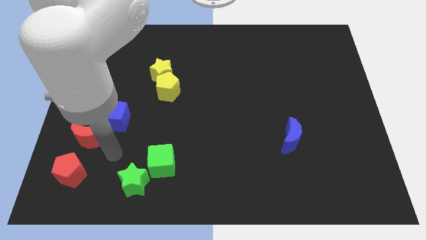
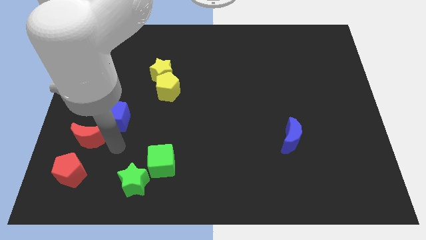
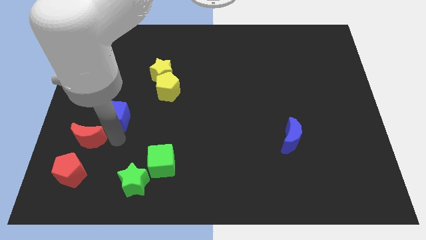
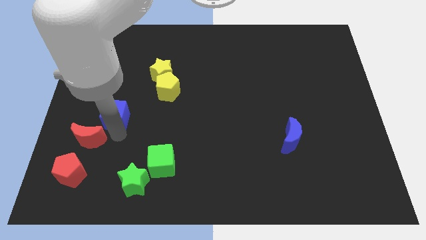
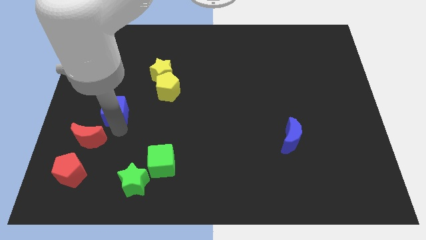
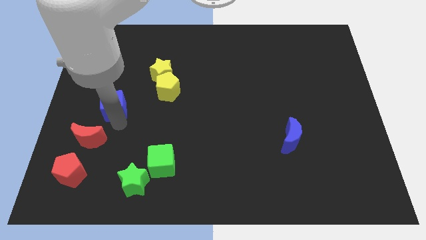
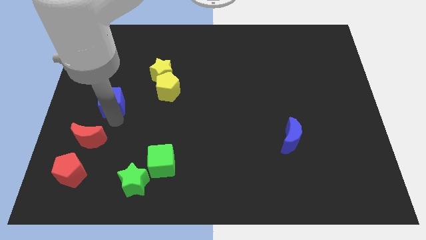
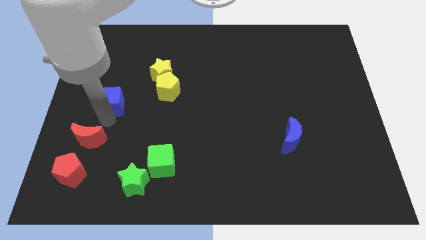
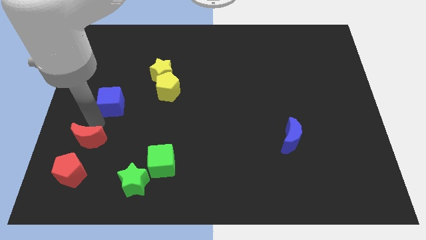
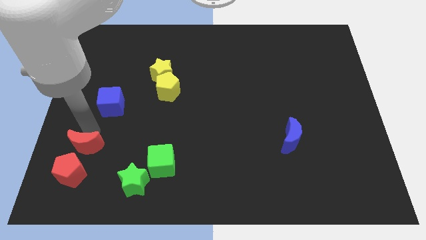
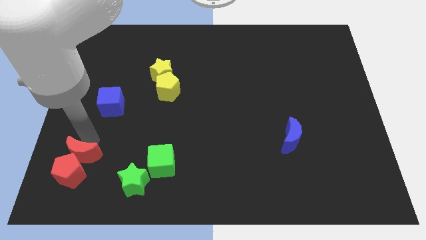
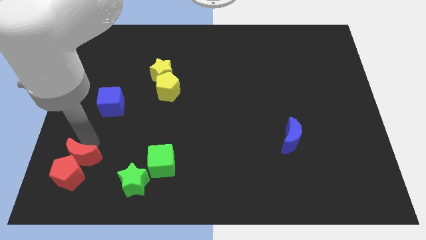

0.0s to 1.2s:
put red blocks together

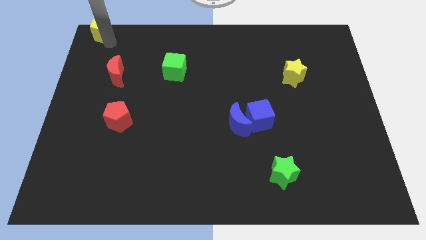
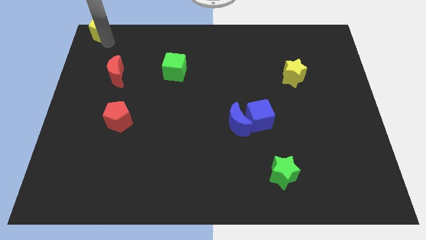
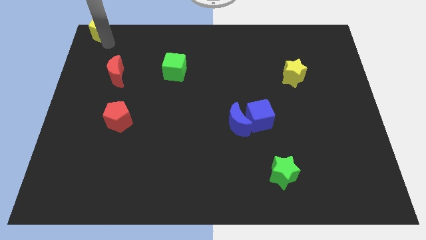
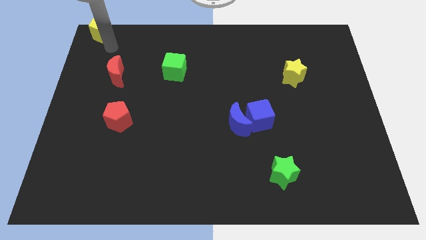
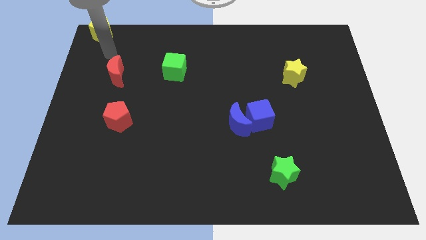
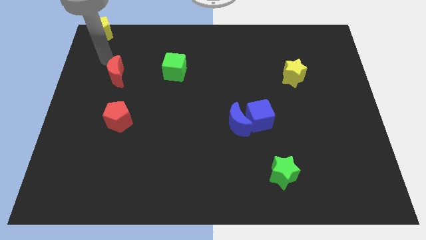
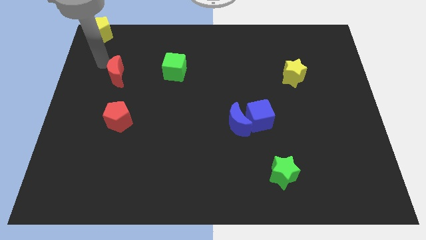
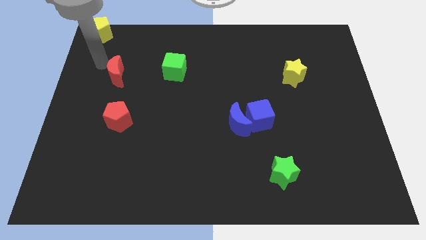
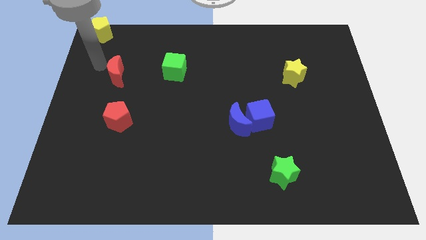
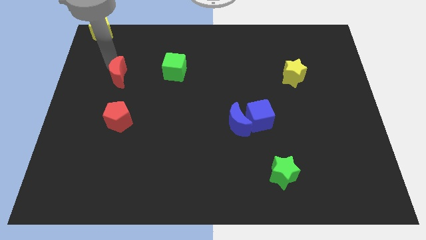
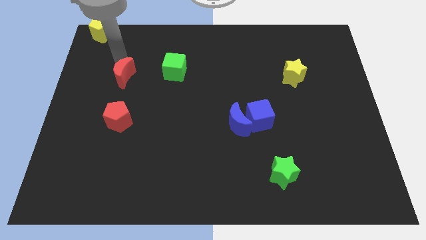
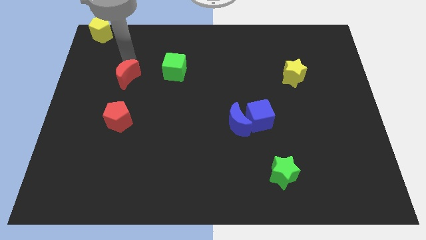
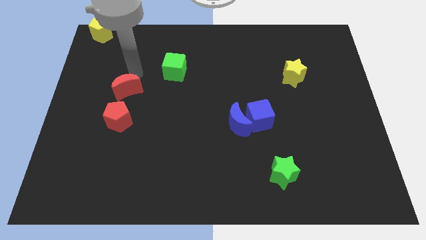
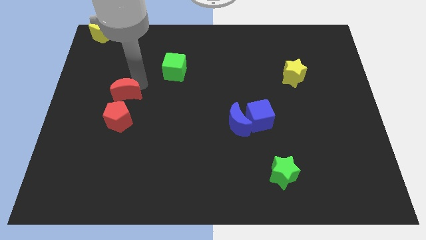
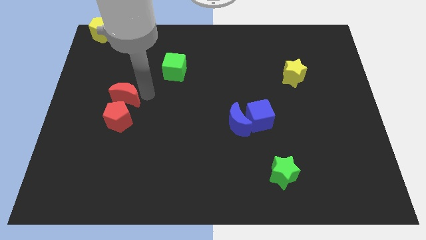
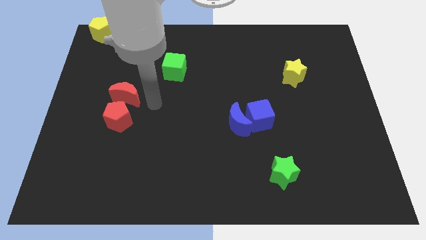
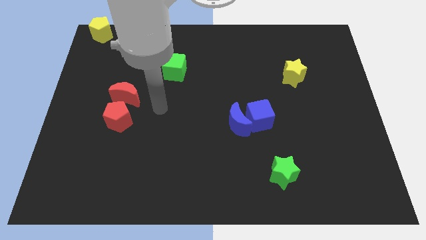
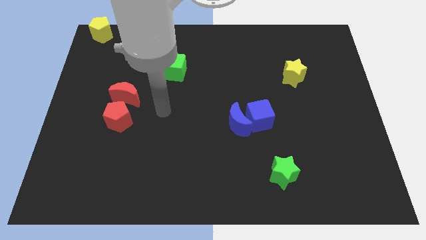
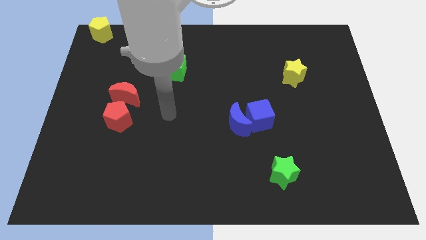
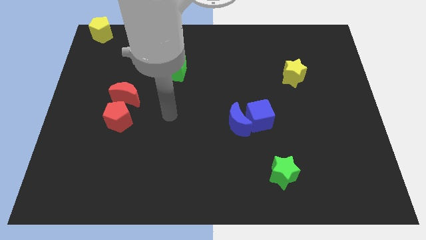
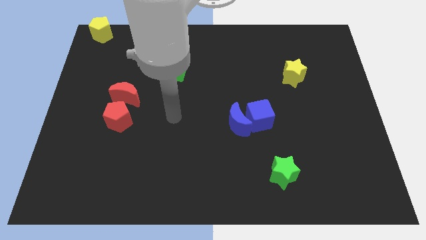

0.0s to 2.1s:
slide red moon into red pentagon

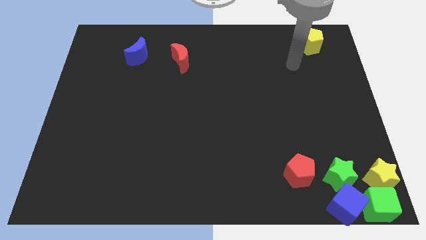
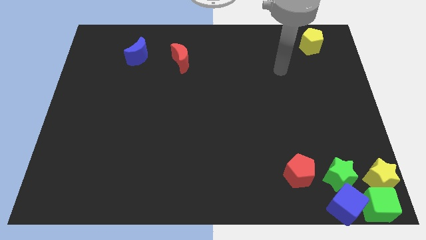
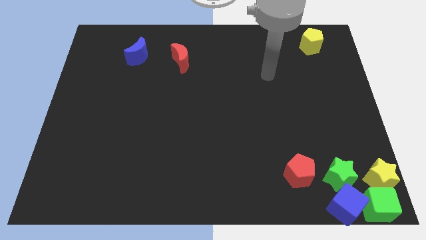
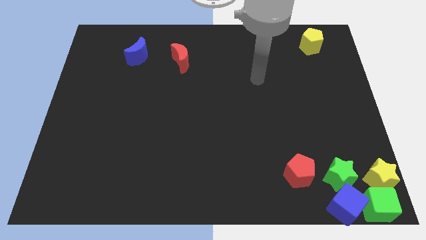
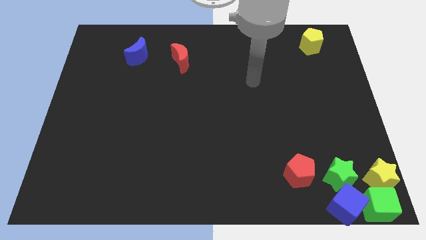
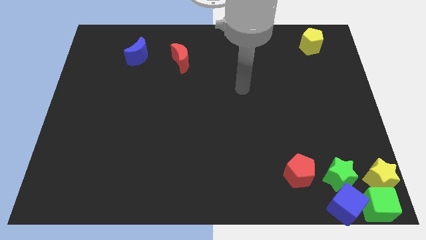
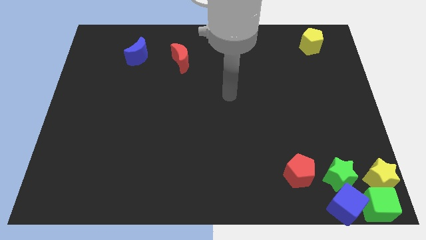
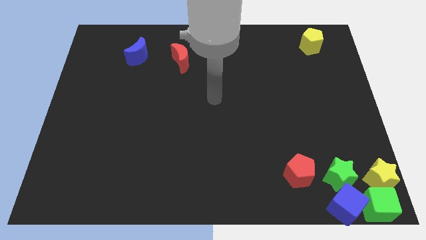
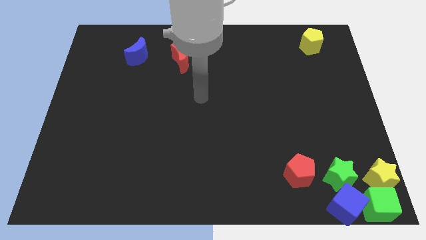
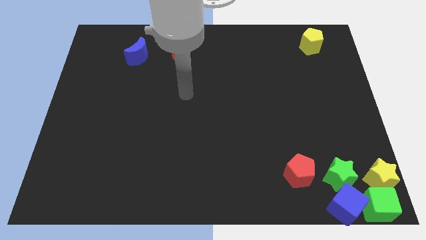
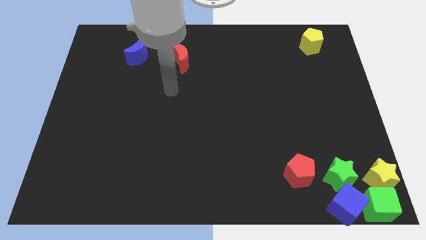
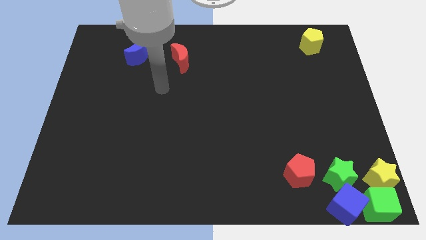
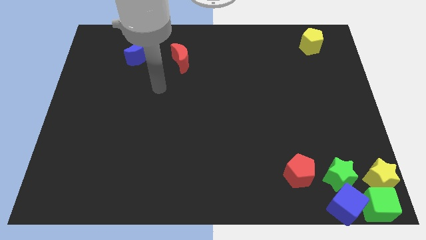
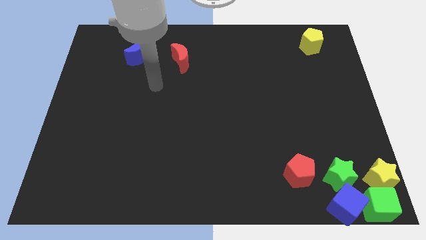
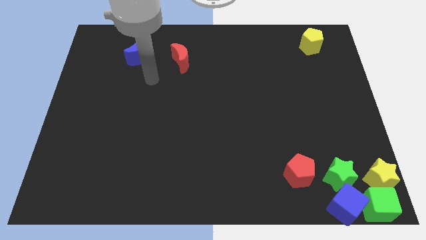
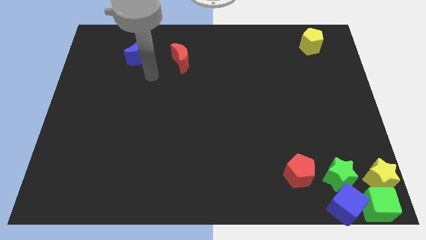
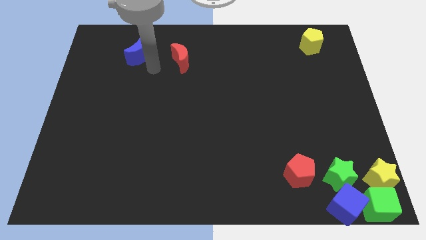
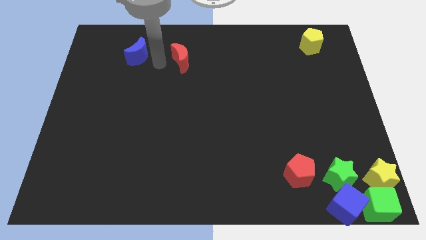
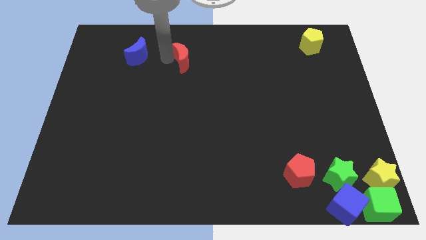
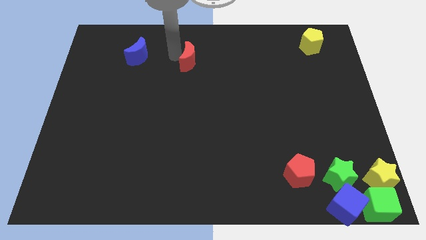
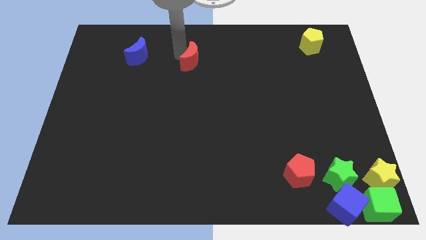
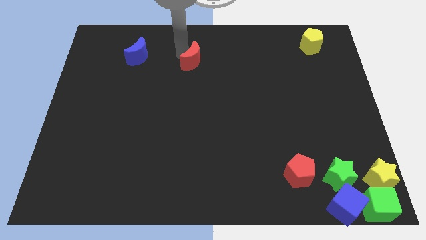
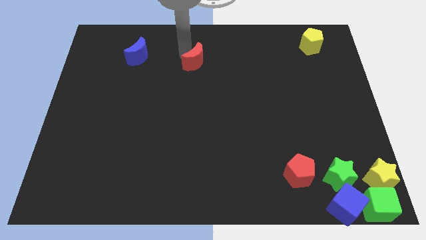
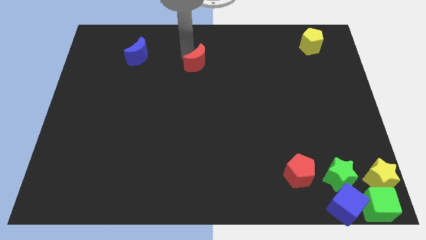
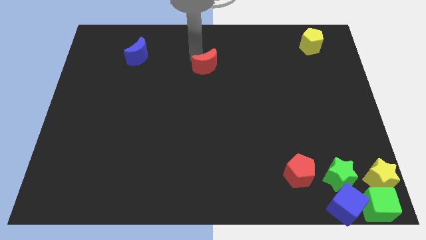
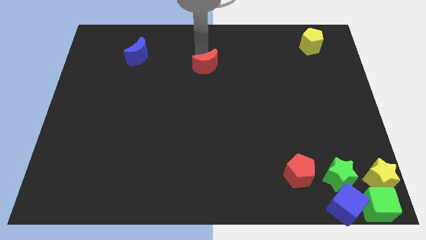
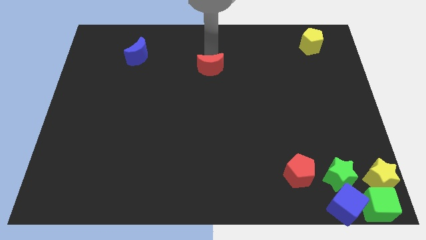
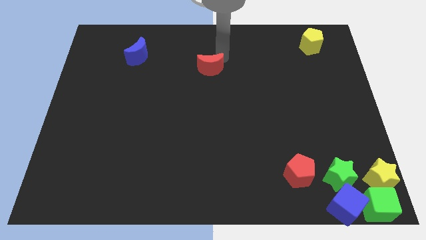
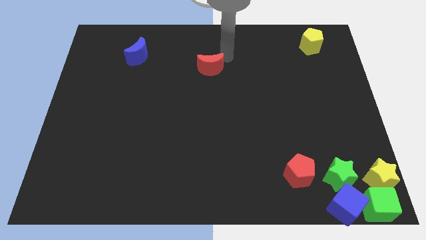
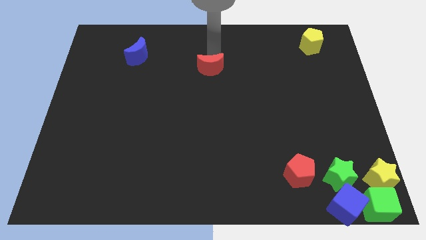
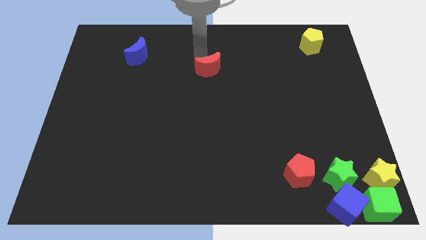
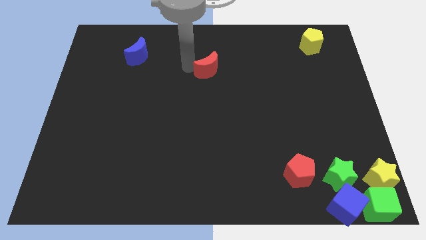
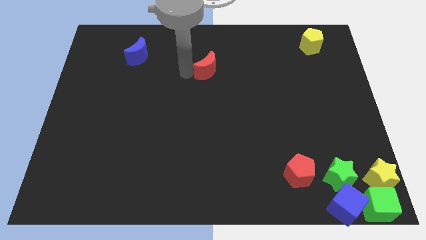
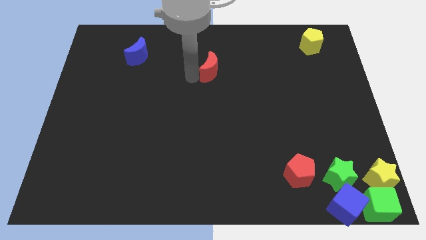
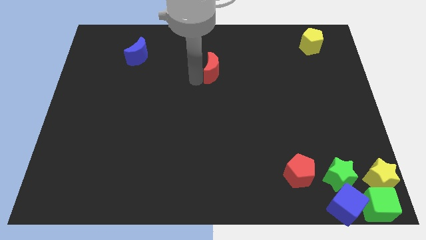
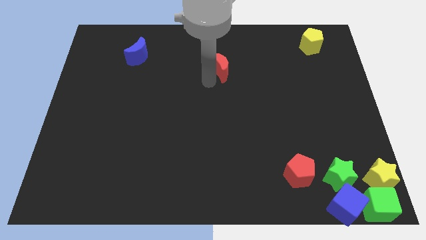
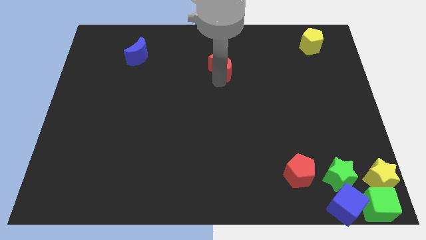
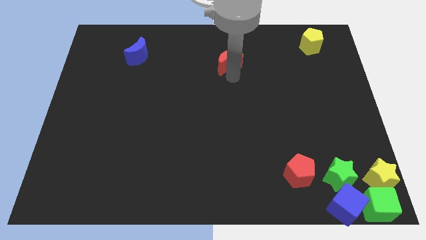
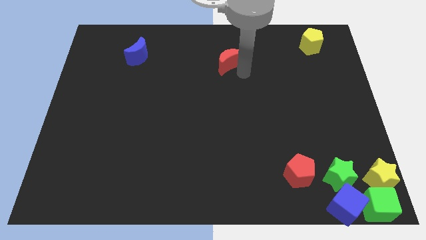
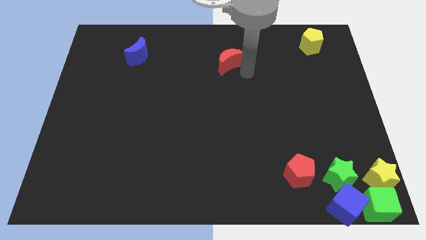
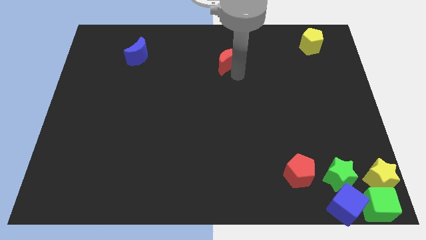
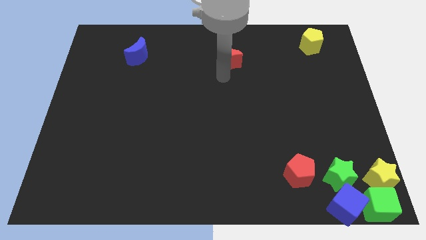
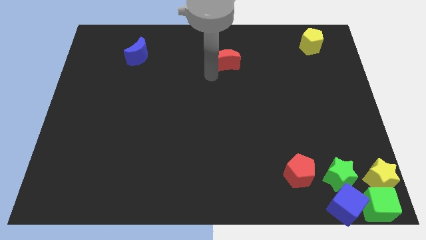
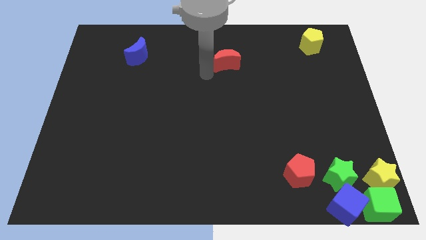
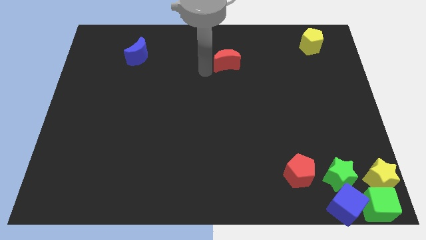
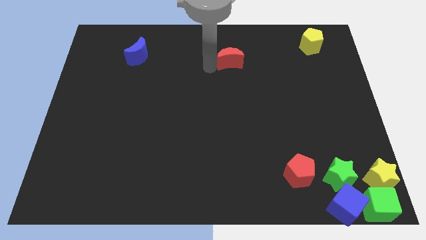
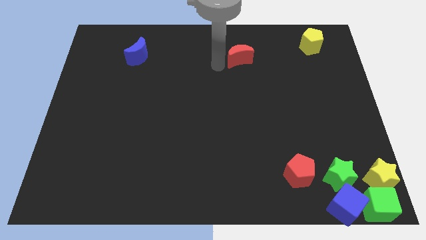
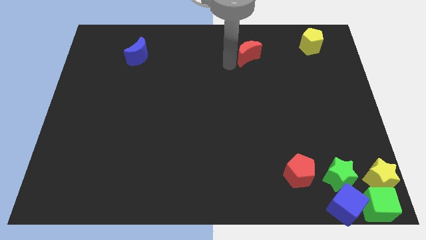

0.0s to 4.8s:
push the red moon towards the left side of the yellow pentagon

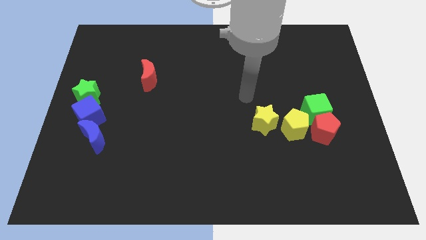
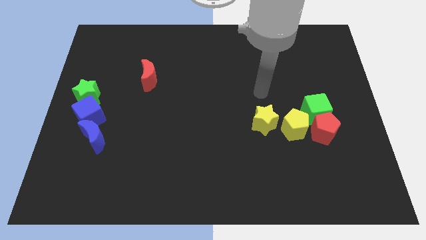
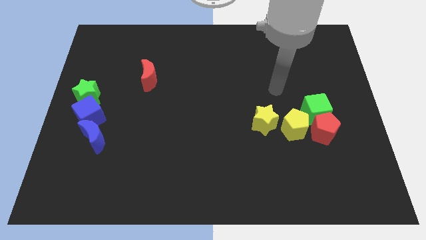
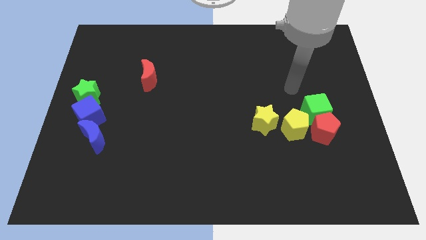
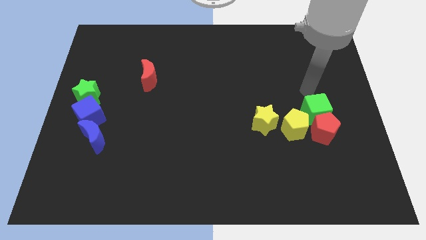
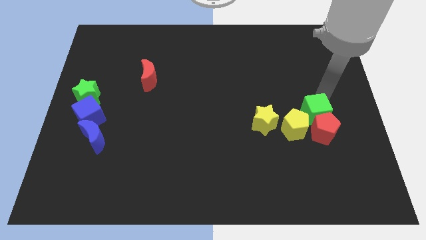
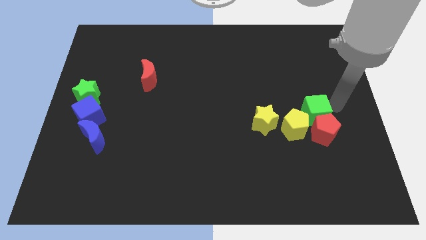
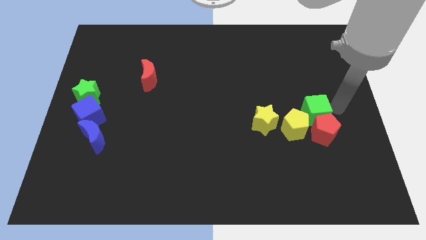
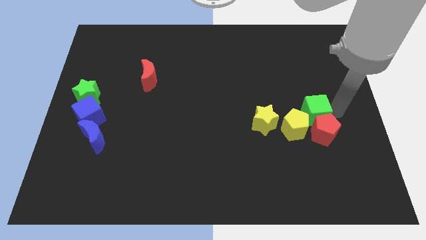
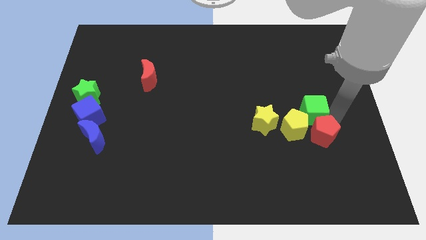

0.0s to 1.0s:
place your arm at the right of the green cube
